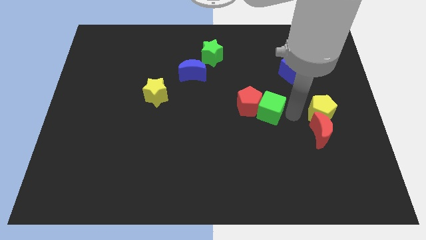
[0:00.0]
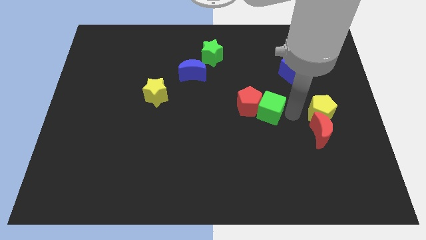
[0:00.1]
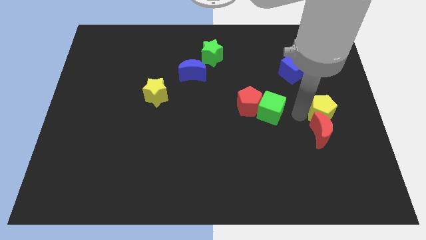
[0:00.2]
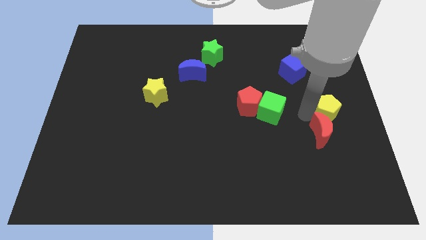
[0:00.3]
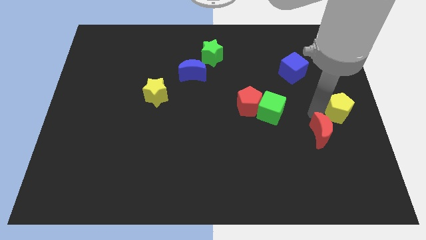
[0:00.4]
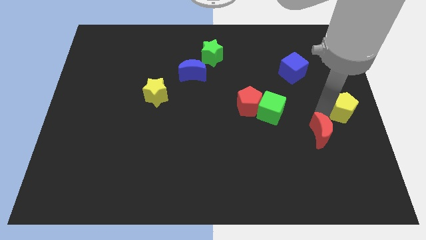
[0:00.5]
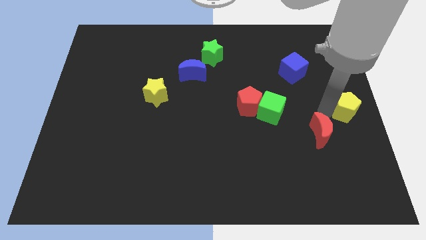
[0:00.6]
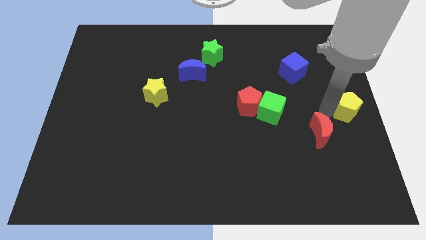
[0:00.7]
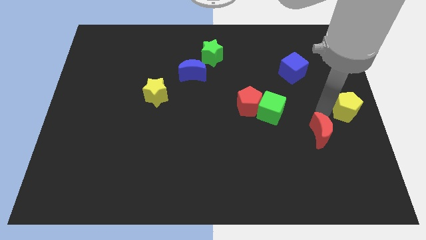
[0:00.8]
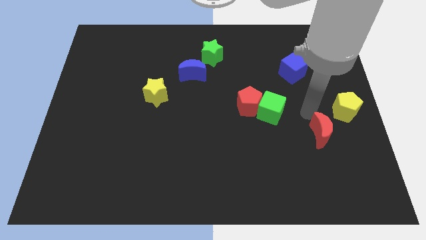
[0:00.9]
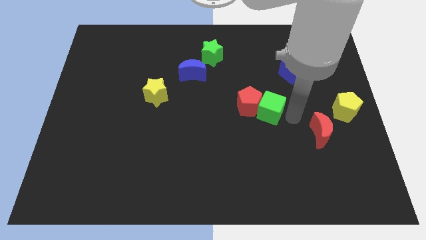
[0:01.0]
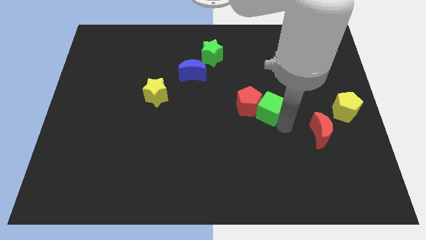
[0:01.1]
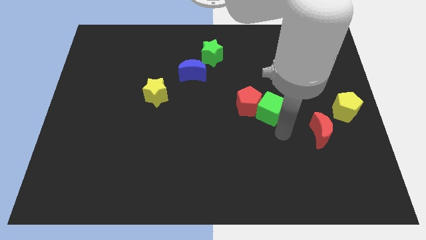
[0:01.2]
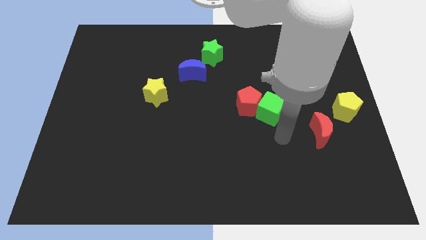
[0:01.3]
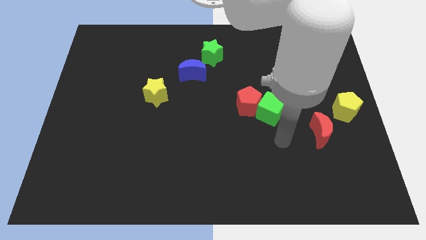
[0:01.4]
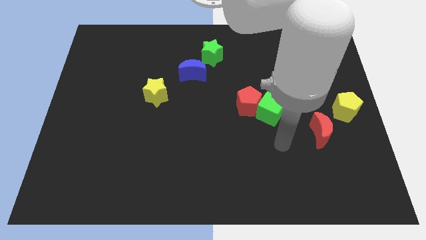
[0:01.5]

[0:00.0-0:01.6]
push the yellow pentagon towards the right side of the board

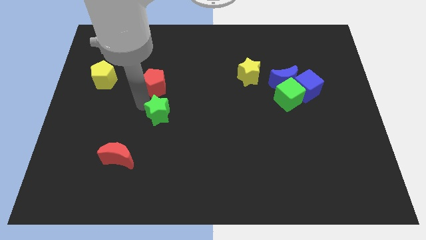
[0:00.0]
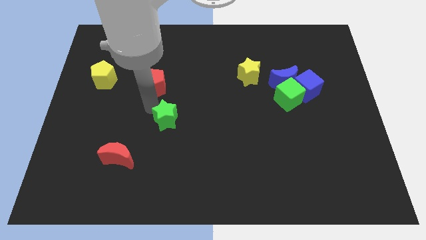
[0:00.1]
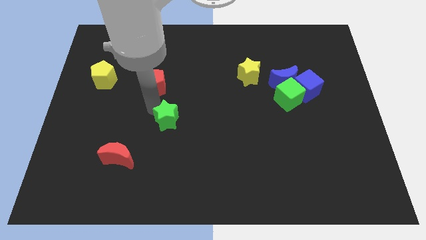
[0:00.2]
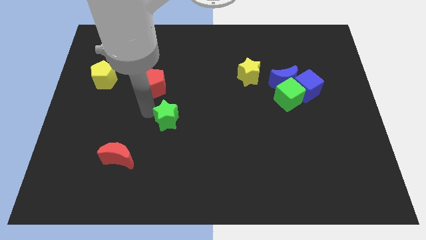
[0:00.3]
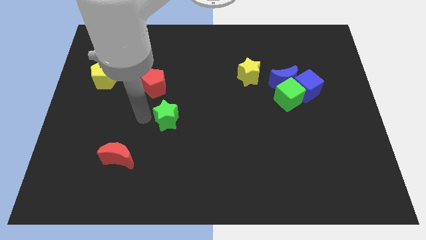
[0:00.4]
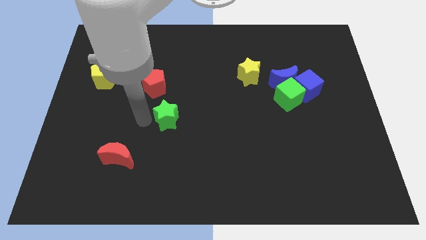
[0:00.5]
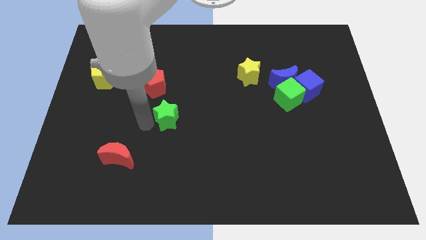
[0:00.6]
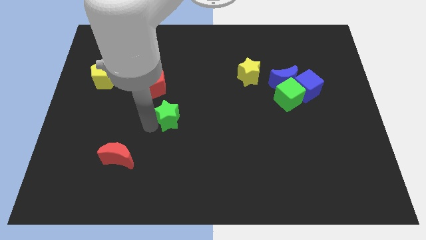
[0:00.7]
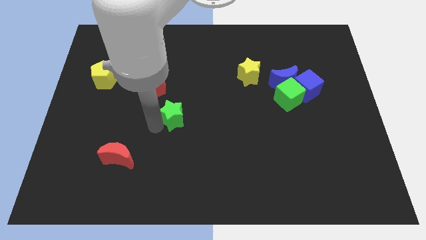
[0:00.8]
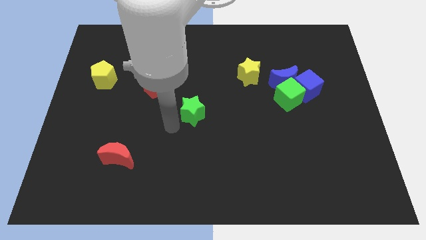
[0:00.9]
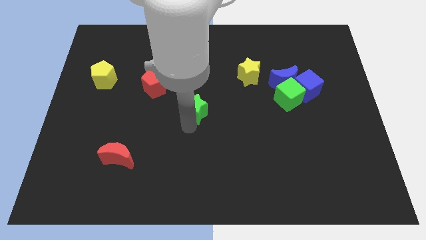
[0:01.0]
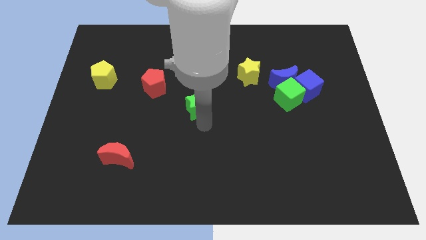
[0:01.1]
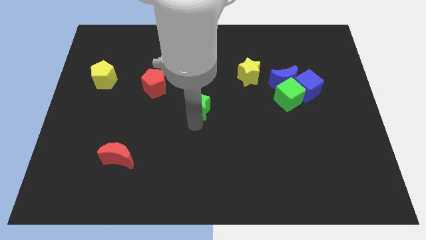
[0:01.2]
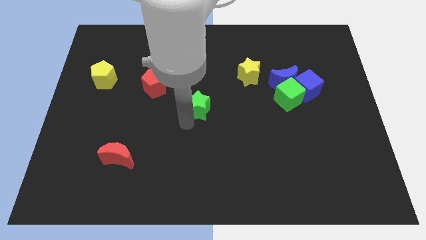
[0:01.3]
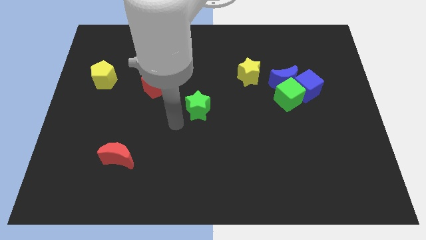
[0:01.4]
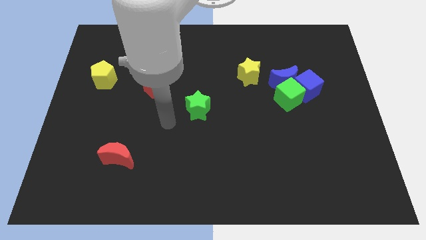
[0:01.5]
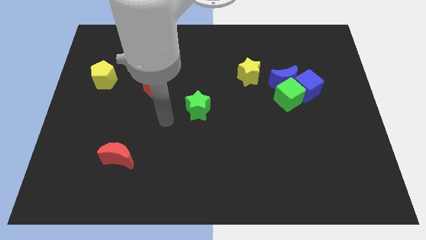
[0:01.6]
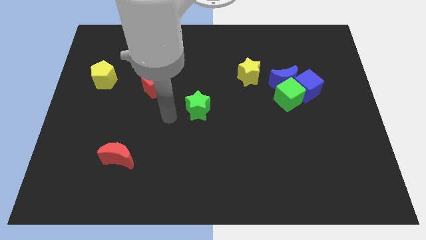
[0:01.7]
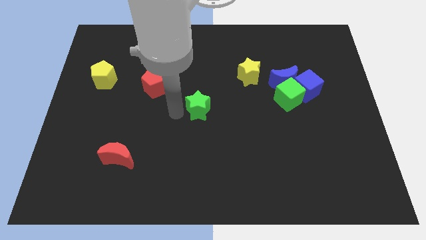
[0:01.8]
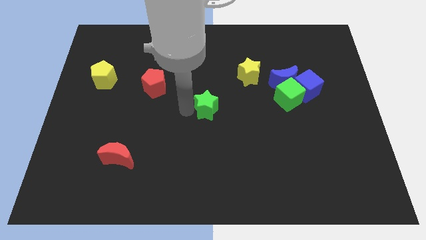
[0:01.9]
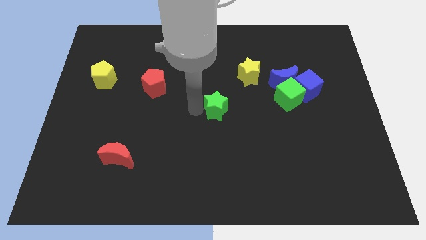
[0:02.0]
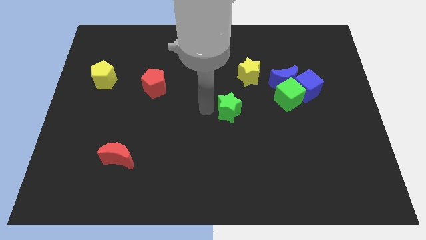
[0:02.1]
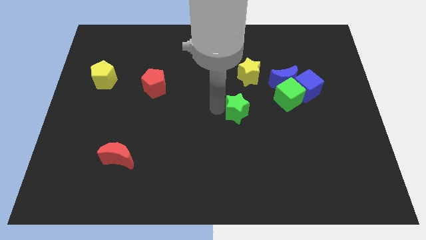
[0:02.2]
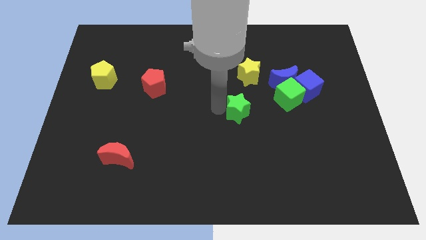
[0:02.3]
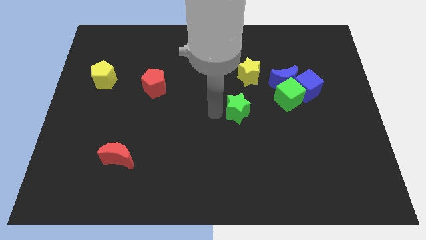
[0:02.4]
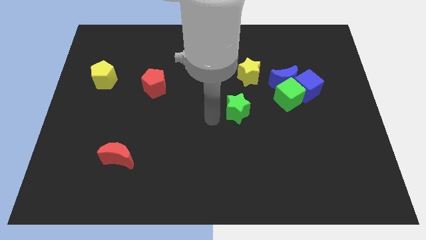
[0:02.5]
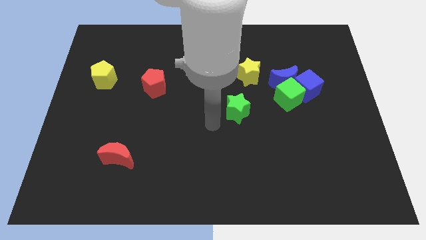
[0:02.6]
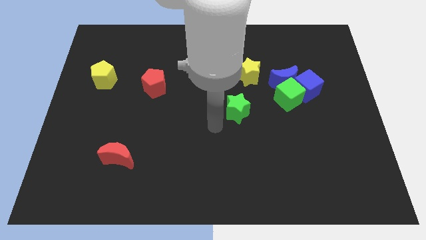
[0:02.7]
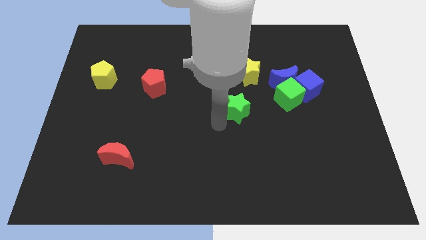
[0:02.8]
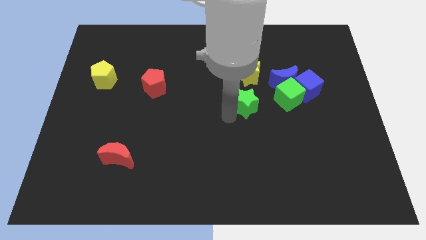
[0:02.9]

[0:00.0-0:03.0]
move green star towards green cube

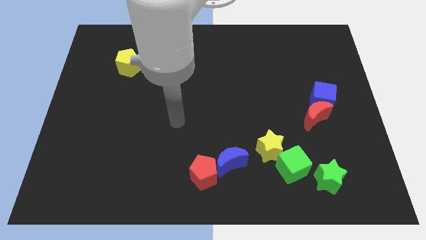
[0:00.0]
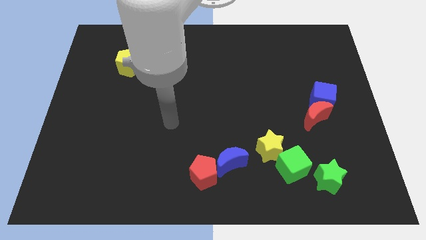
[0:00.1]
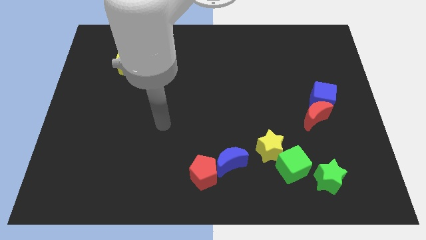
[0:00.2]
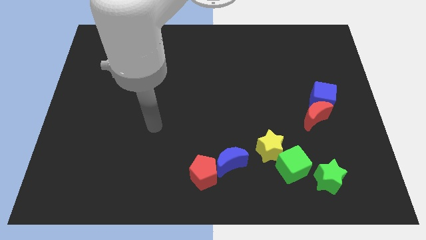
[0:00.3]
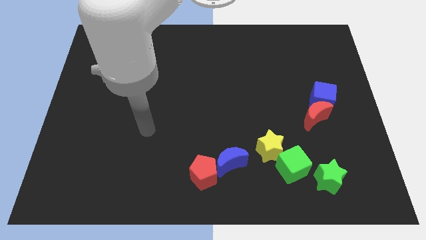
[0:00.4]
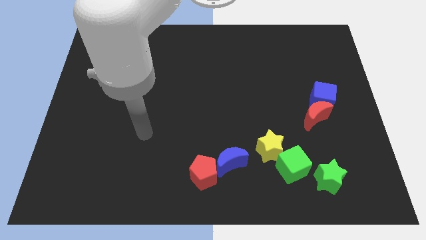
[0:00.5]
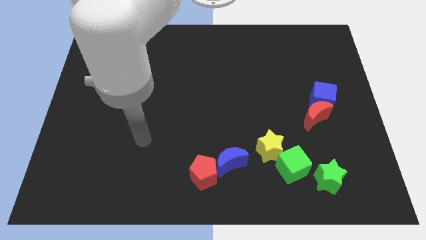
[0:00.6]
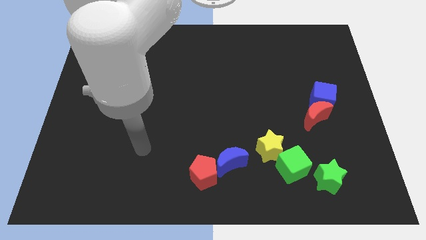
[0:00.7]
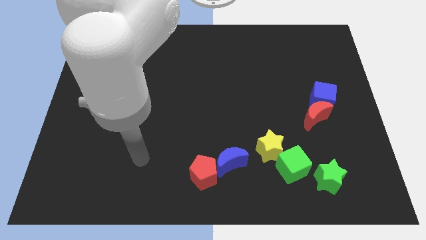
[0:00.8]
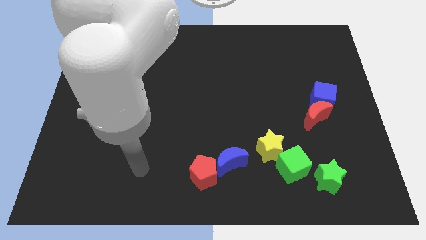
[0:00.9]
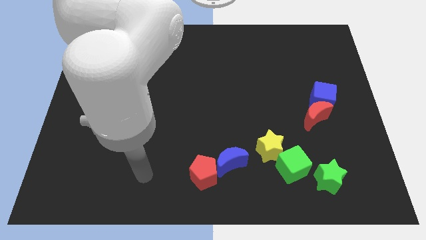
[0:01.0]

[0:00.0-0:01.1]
move your arm to the left of red pentagon

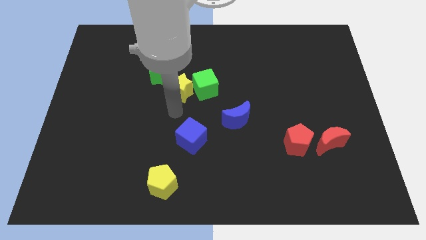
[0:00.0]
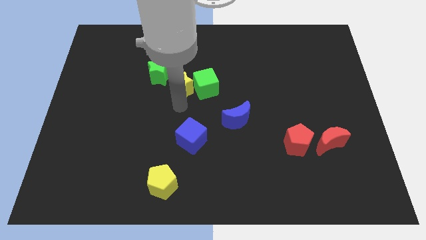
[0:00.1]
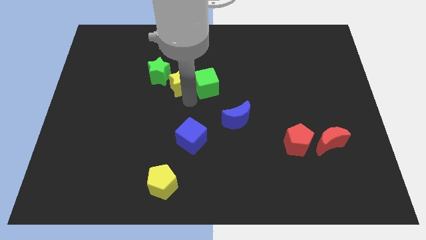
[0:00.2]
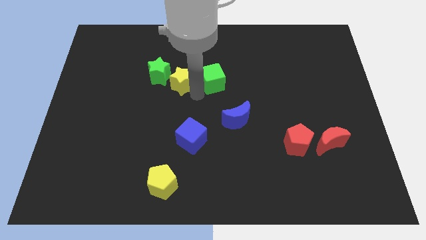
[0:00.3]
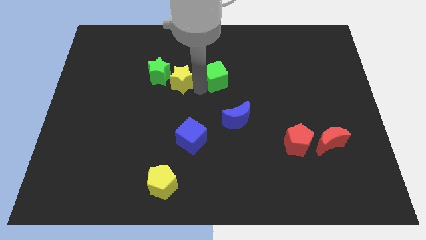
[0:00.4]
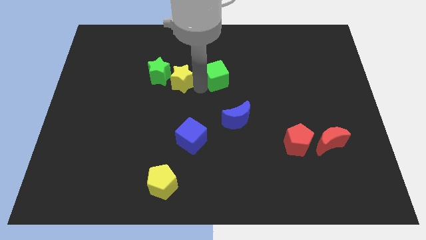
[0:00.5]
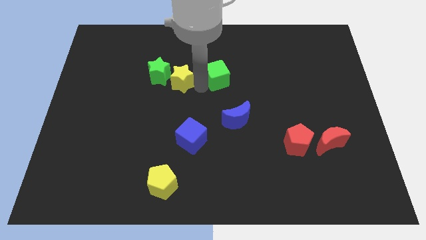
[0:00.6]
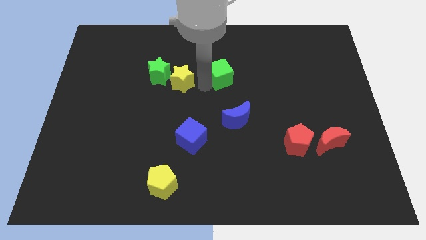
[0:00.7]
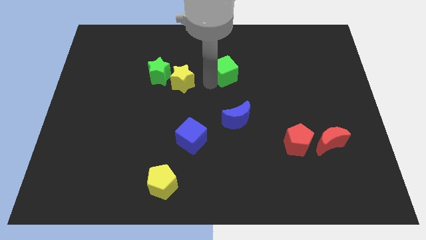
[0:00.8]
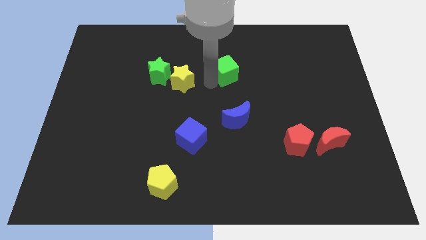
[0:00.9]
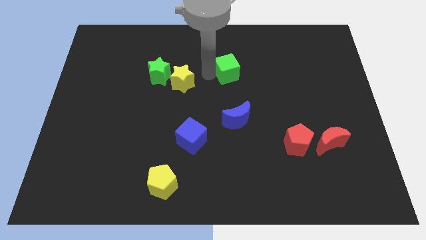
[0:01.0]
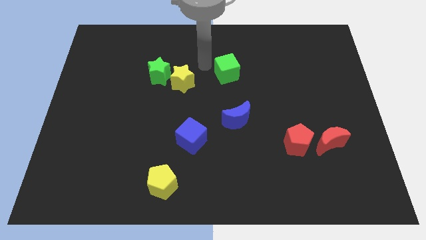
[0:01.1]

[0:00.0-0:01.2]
separate the green cube from the yellow star

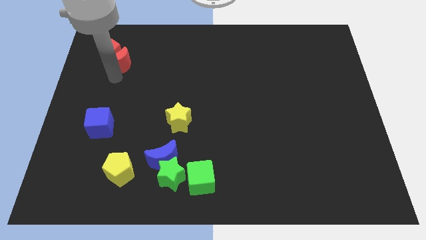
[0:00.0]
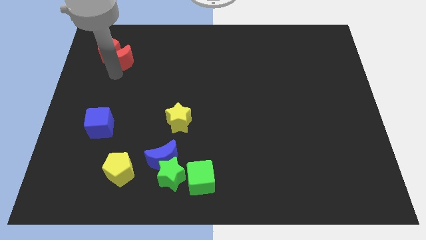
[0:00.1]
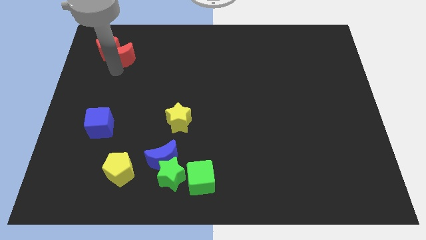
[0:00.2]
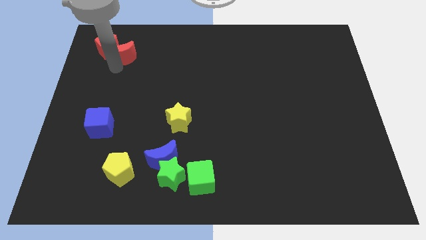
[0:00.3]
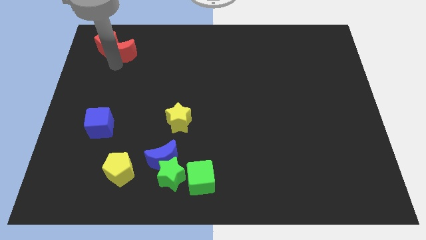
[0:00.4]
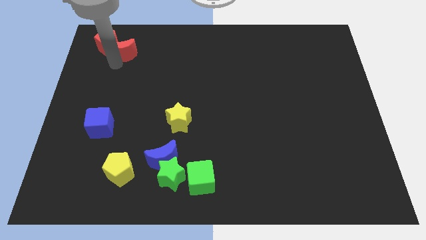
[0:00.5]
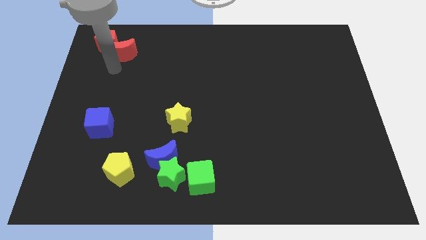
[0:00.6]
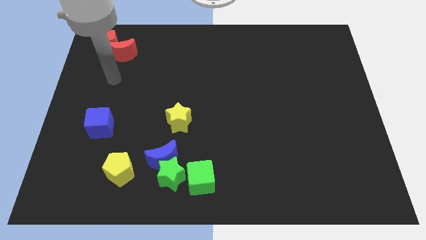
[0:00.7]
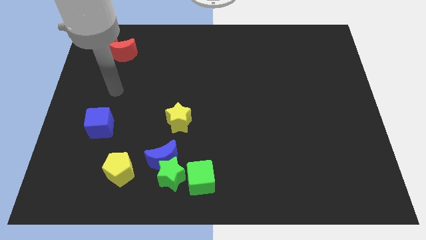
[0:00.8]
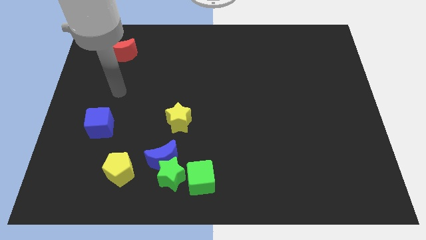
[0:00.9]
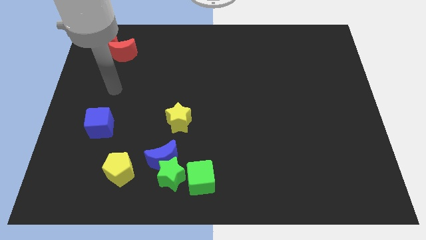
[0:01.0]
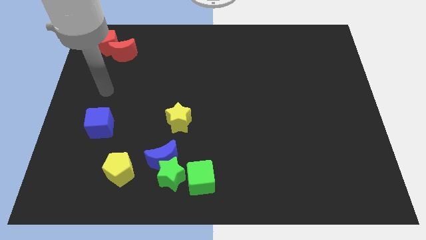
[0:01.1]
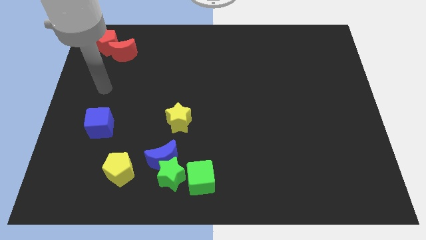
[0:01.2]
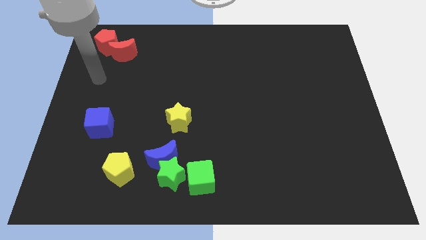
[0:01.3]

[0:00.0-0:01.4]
move the red blocks to the top left

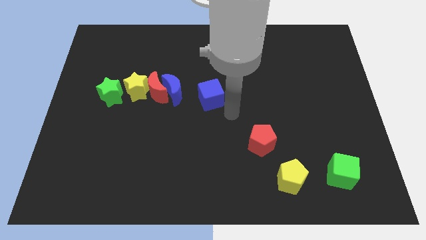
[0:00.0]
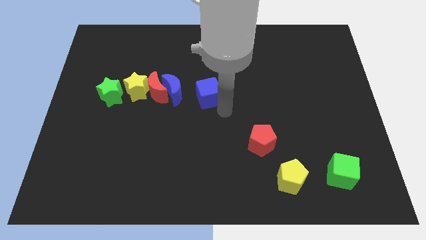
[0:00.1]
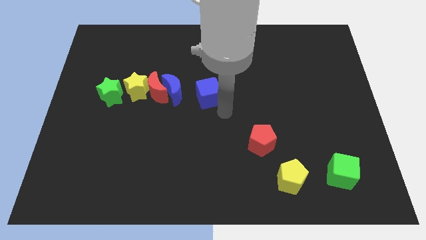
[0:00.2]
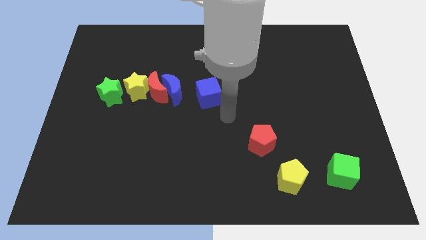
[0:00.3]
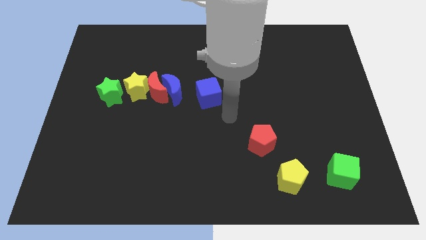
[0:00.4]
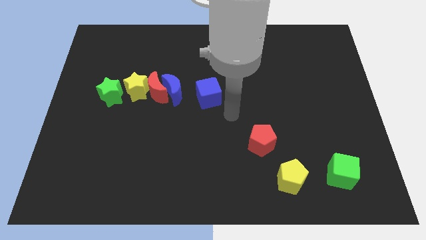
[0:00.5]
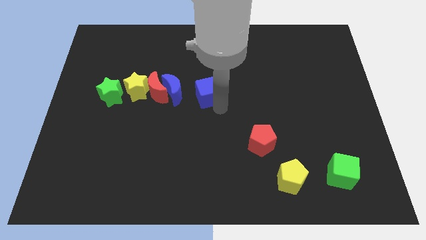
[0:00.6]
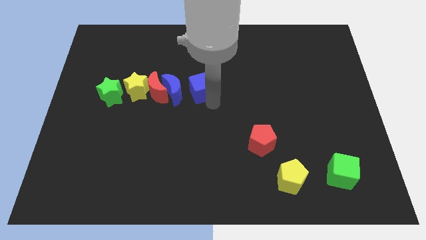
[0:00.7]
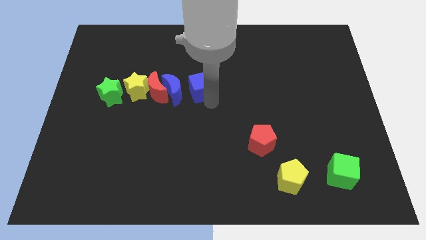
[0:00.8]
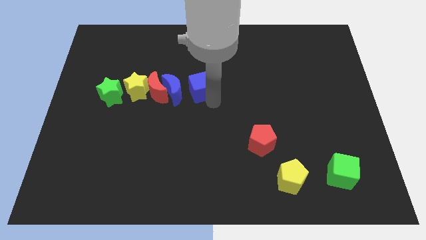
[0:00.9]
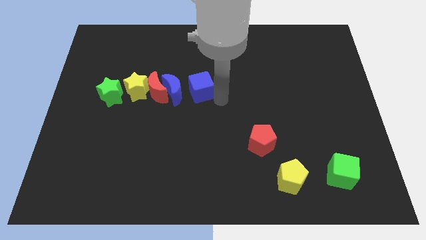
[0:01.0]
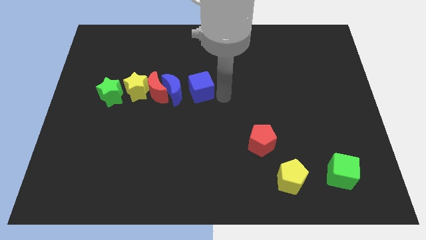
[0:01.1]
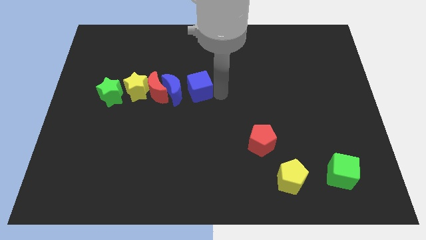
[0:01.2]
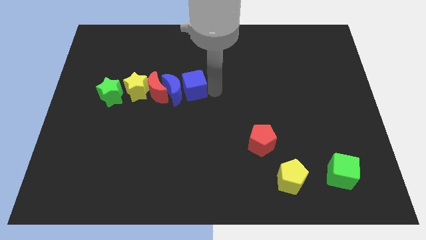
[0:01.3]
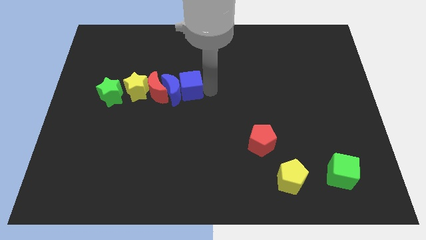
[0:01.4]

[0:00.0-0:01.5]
move the blue cube close to the blue moon
